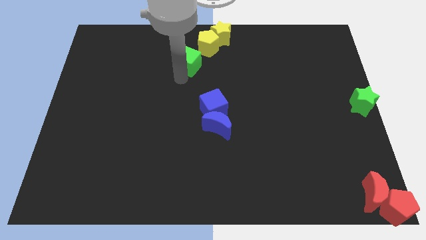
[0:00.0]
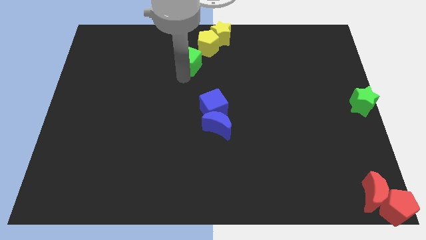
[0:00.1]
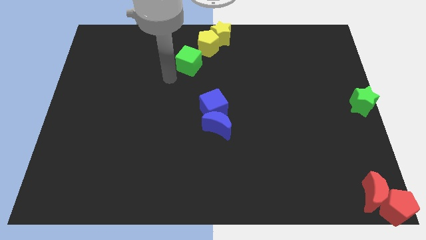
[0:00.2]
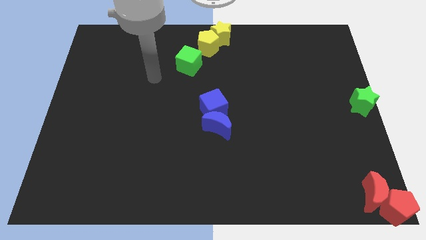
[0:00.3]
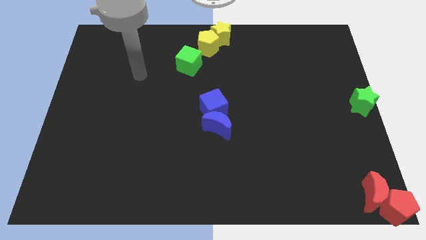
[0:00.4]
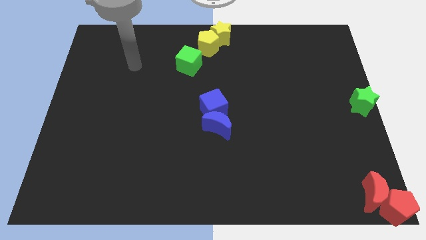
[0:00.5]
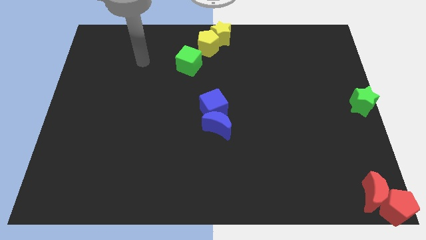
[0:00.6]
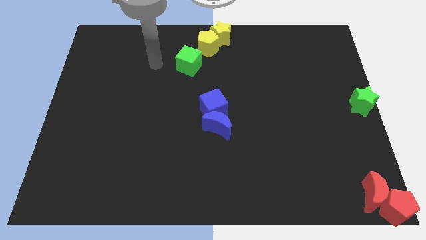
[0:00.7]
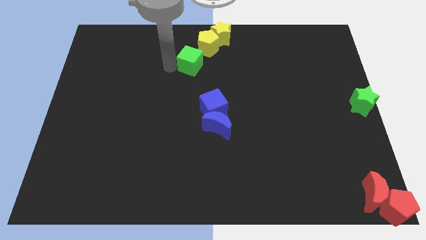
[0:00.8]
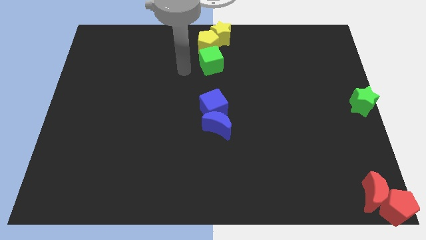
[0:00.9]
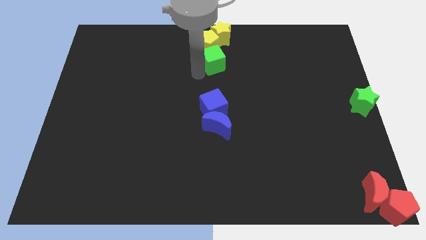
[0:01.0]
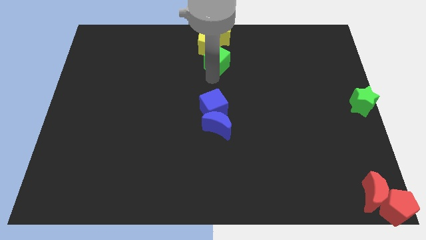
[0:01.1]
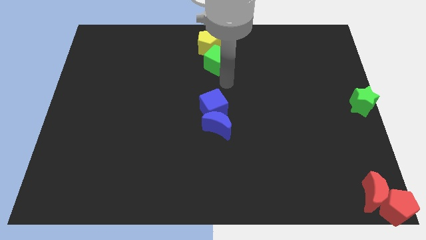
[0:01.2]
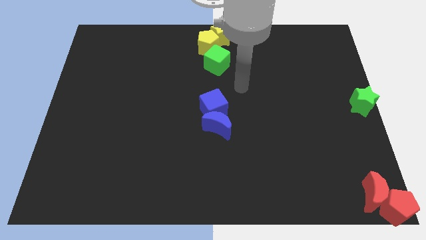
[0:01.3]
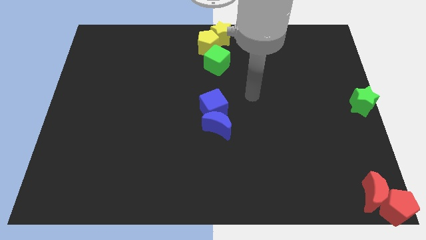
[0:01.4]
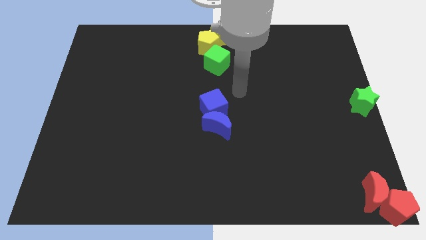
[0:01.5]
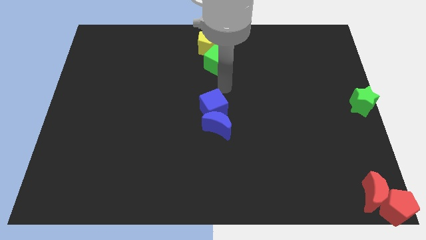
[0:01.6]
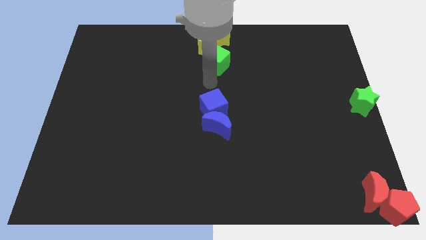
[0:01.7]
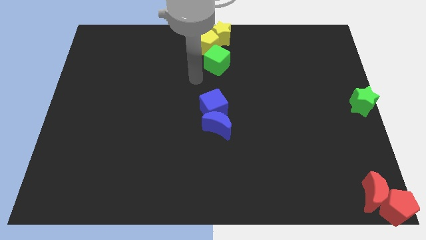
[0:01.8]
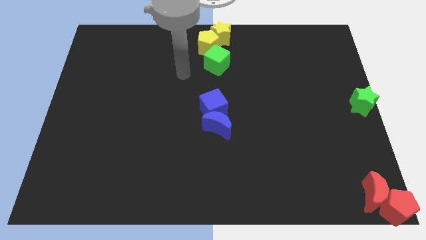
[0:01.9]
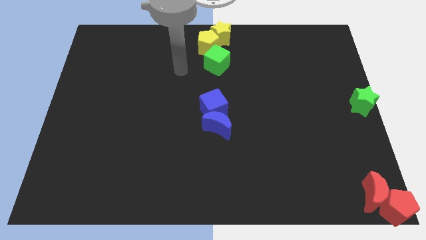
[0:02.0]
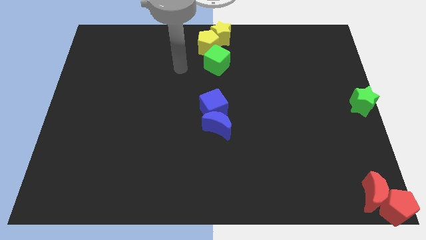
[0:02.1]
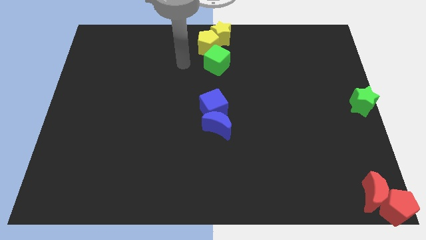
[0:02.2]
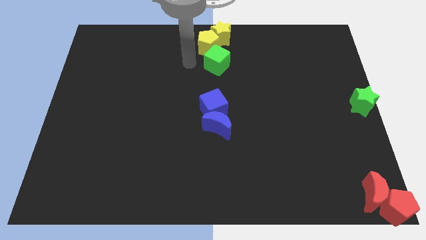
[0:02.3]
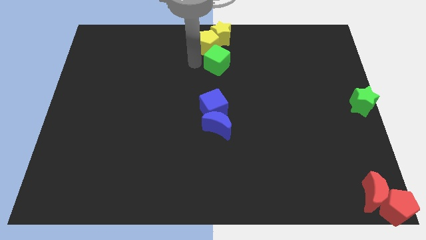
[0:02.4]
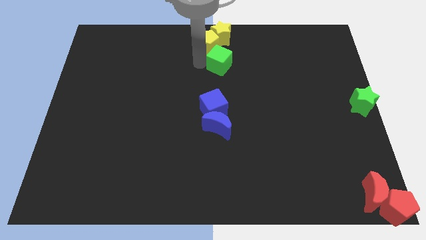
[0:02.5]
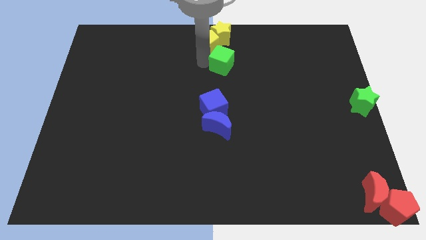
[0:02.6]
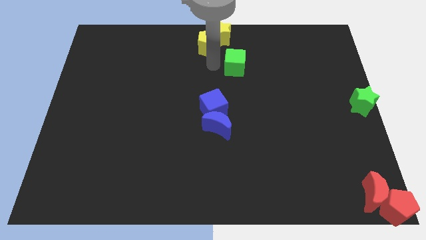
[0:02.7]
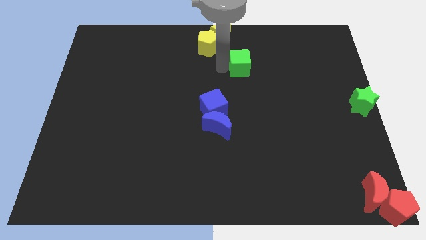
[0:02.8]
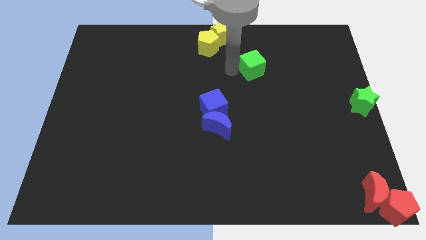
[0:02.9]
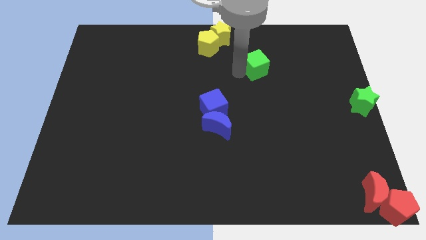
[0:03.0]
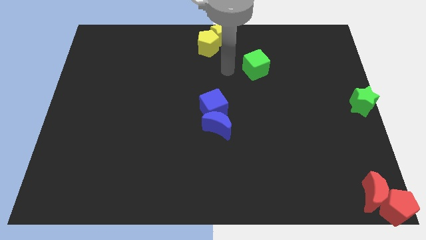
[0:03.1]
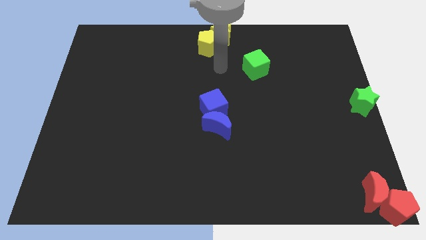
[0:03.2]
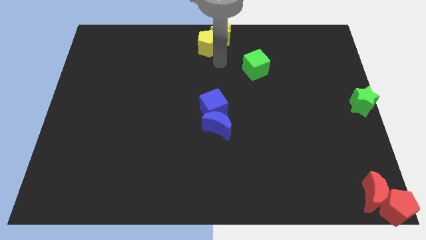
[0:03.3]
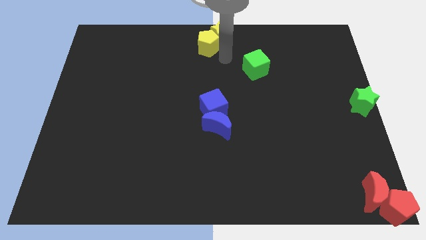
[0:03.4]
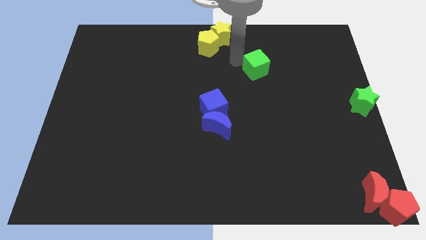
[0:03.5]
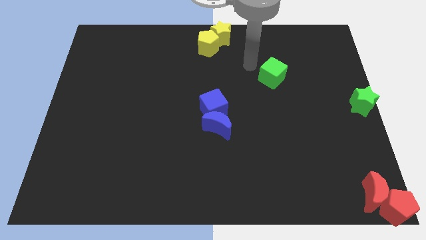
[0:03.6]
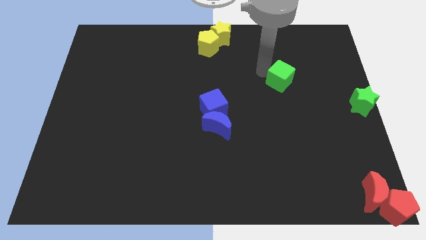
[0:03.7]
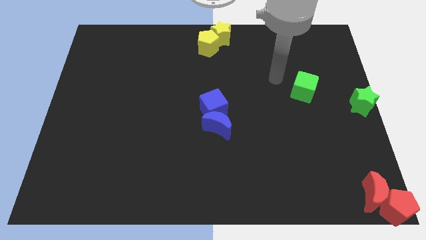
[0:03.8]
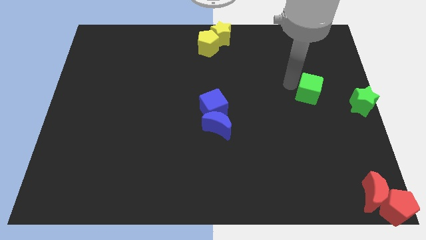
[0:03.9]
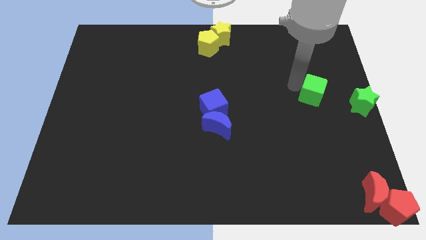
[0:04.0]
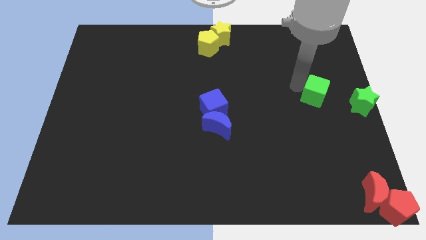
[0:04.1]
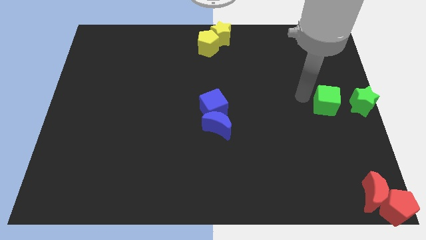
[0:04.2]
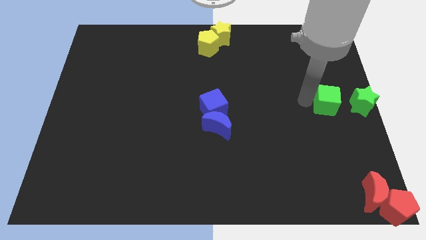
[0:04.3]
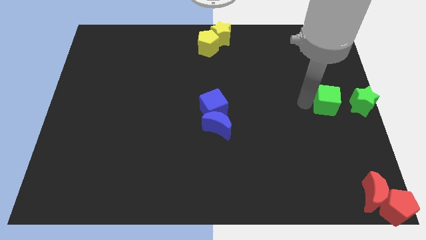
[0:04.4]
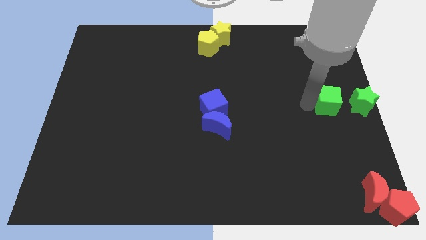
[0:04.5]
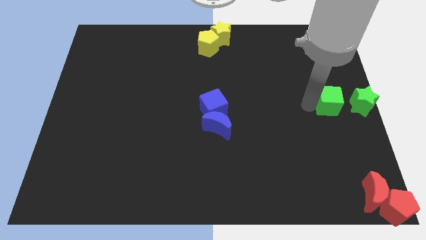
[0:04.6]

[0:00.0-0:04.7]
move the green cube to the left side of the green star

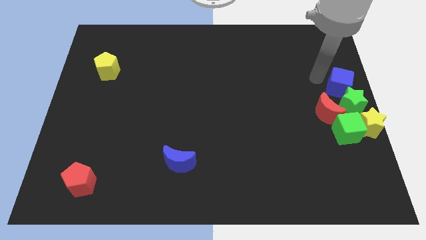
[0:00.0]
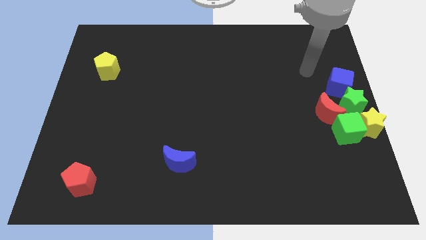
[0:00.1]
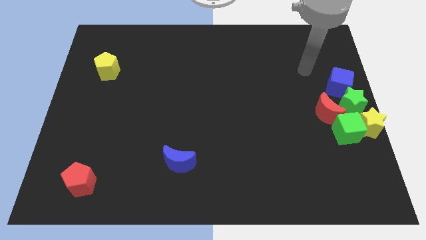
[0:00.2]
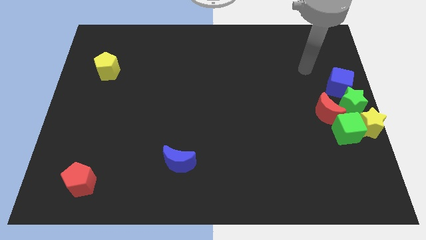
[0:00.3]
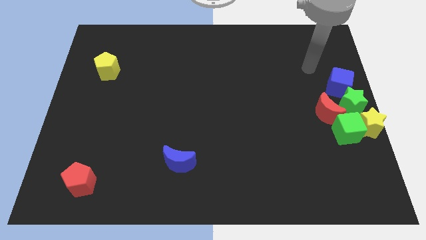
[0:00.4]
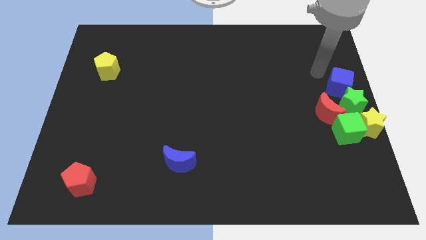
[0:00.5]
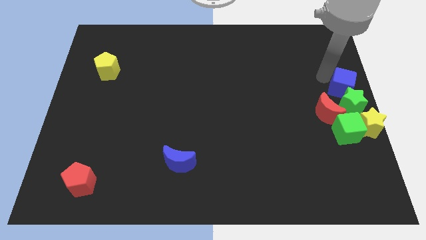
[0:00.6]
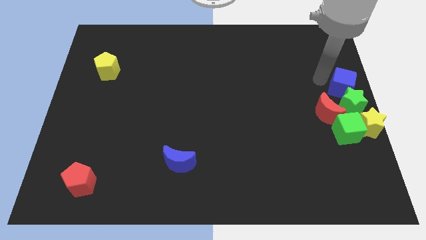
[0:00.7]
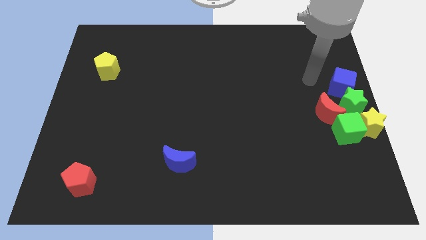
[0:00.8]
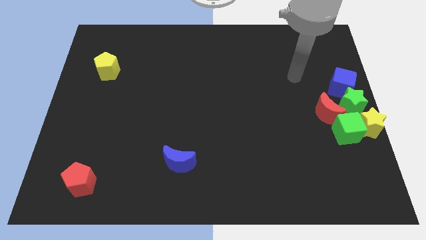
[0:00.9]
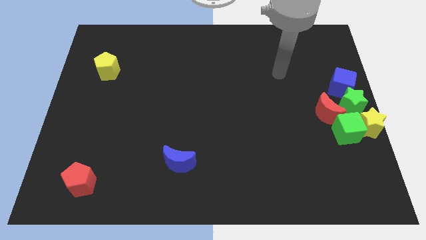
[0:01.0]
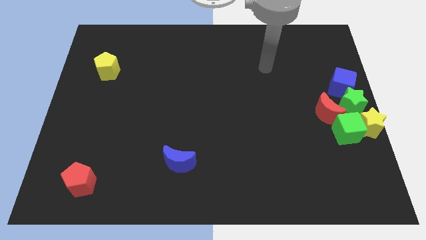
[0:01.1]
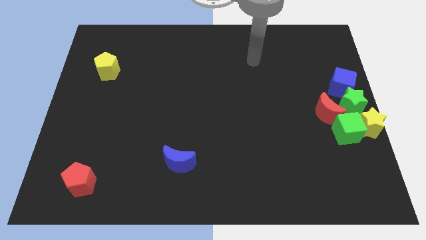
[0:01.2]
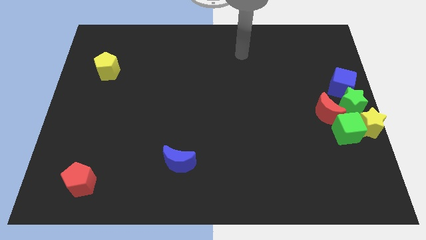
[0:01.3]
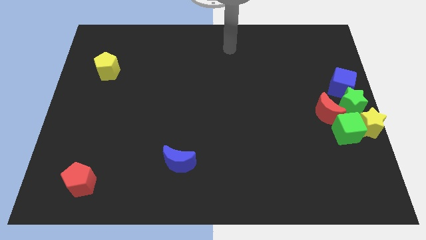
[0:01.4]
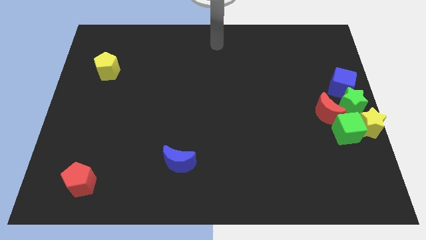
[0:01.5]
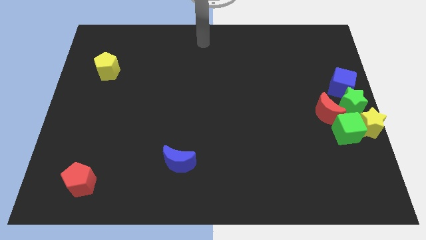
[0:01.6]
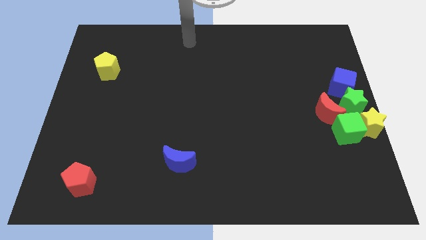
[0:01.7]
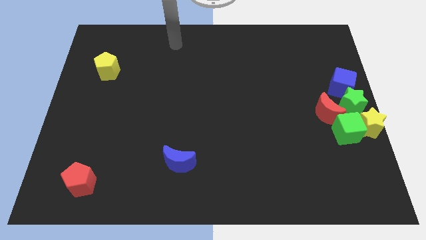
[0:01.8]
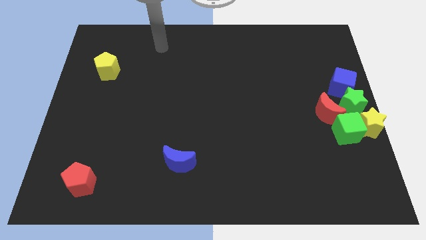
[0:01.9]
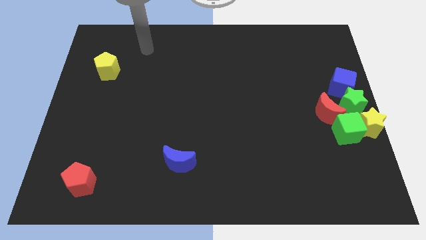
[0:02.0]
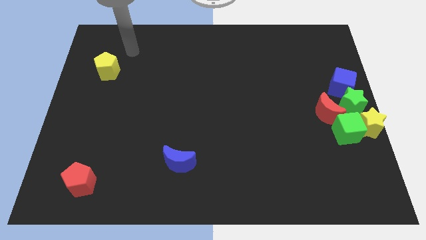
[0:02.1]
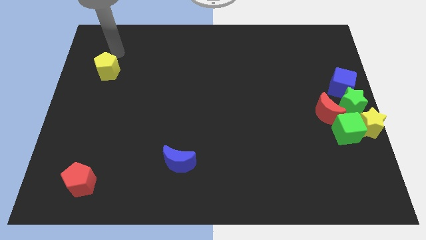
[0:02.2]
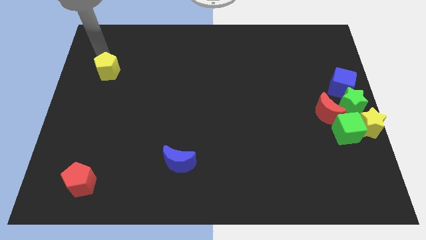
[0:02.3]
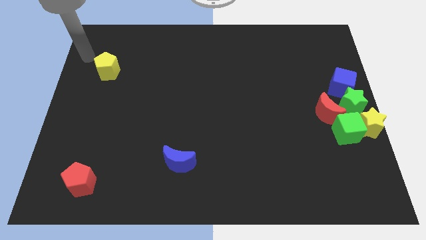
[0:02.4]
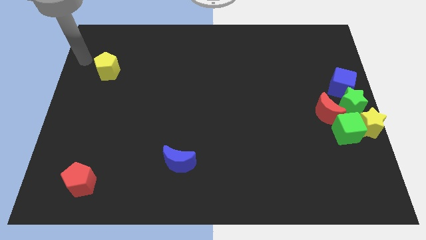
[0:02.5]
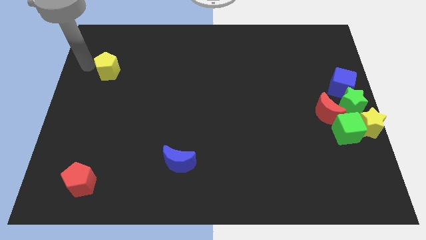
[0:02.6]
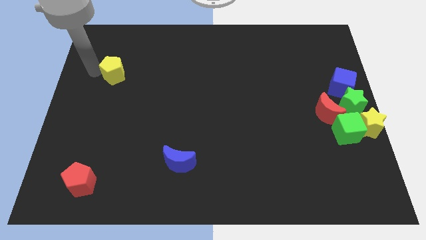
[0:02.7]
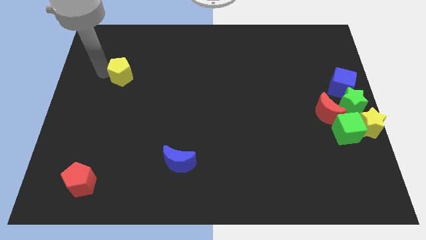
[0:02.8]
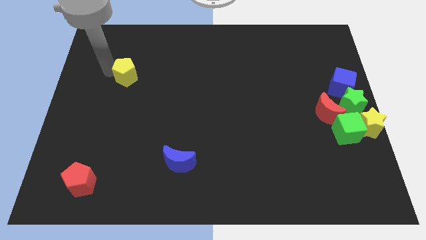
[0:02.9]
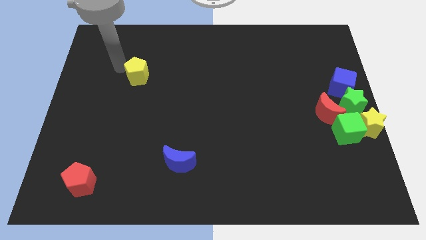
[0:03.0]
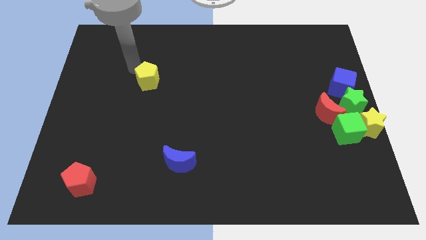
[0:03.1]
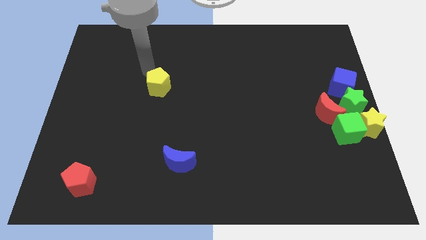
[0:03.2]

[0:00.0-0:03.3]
move the yellow pentagon slightly to the center

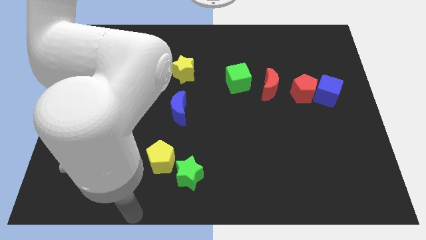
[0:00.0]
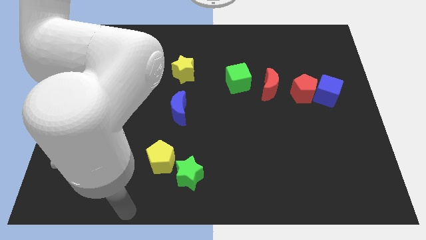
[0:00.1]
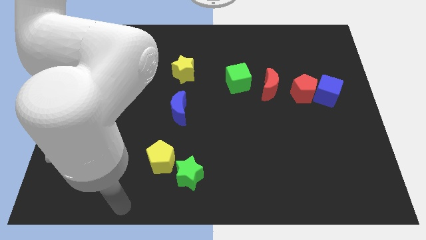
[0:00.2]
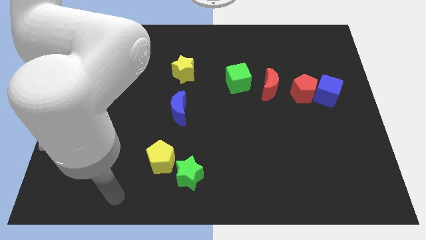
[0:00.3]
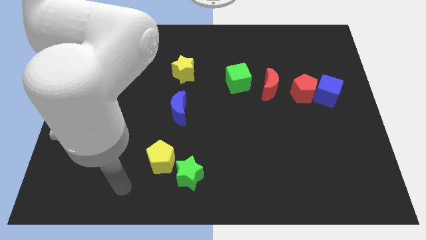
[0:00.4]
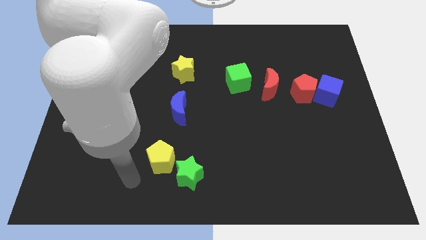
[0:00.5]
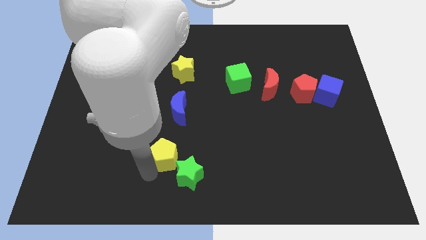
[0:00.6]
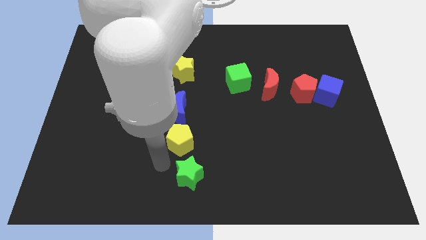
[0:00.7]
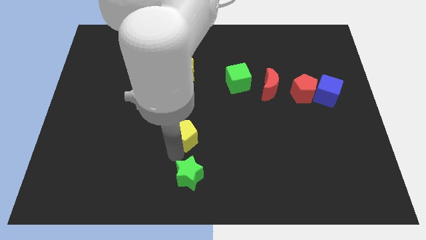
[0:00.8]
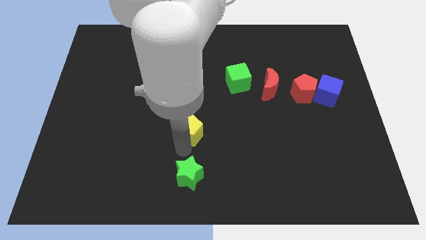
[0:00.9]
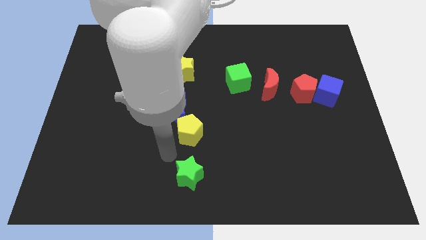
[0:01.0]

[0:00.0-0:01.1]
place the yellow pentagon vertical to the green star

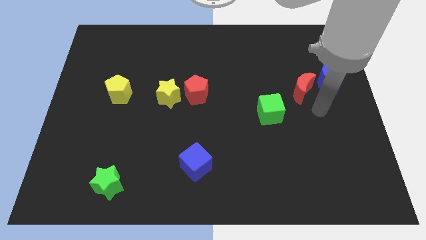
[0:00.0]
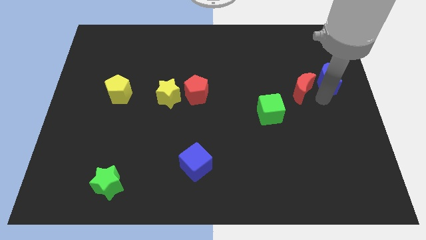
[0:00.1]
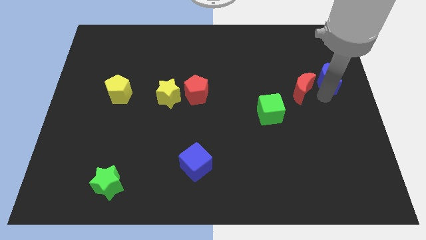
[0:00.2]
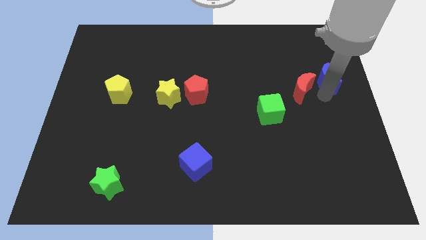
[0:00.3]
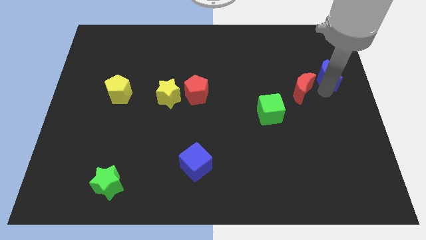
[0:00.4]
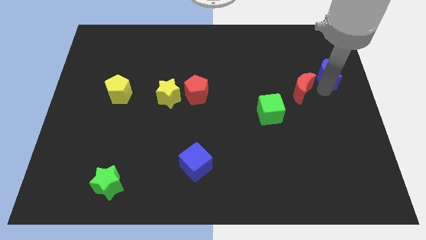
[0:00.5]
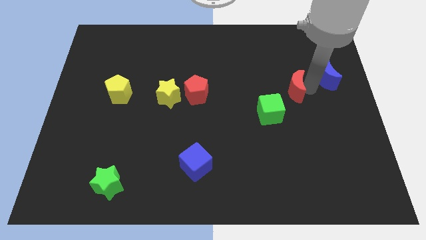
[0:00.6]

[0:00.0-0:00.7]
touch at the bottom side of the blue crescent
